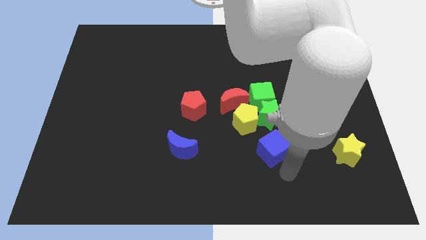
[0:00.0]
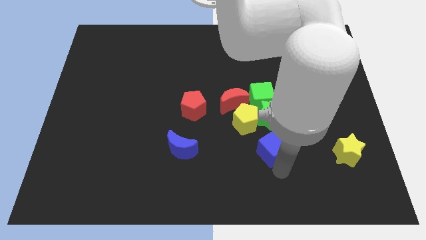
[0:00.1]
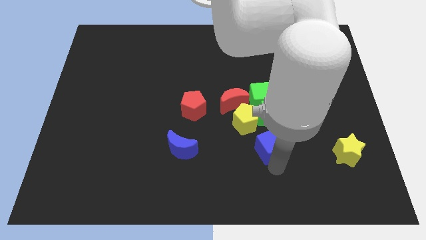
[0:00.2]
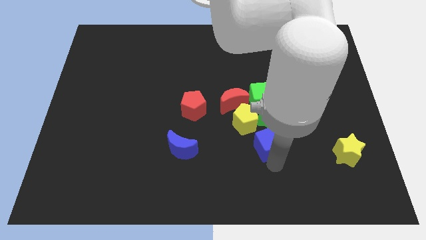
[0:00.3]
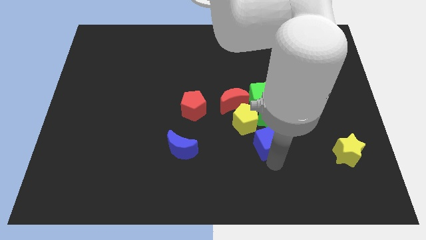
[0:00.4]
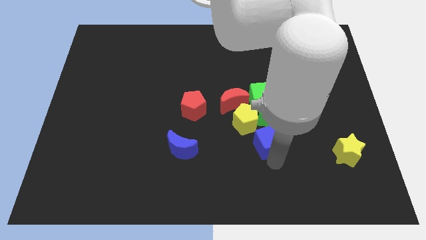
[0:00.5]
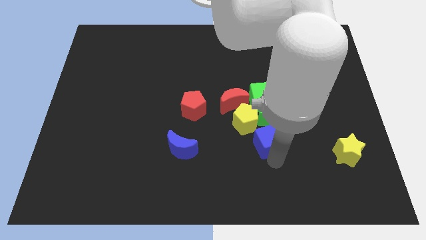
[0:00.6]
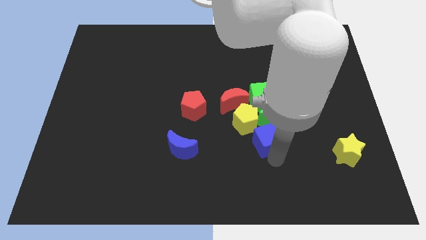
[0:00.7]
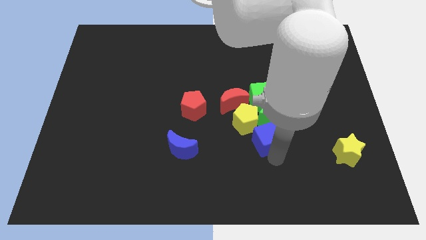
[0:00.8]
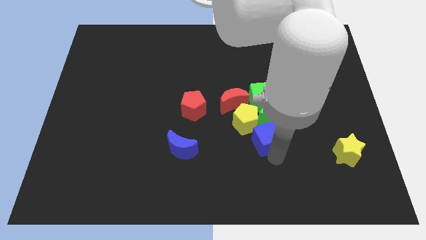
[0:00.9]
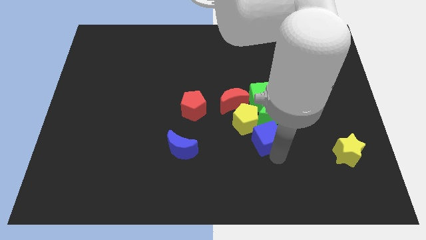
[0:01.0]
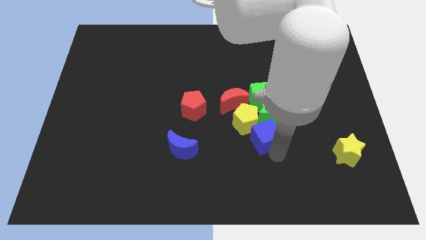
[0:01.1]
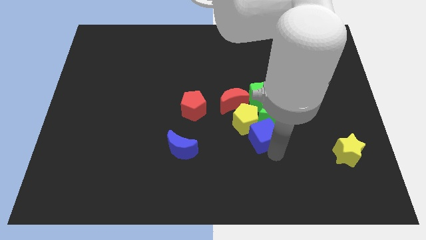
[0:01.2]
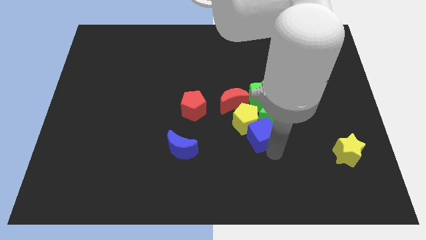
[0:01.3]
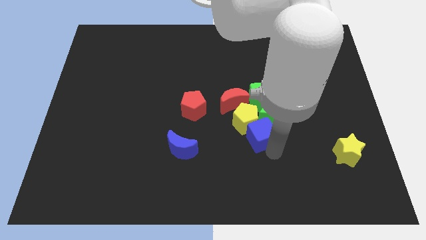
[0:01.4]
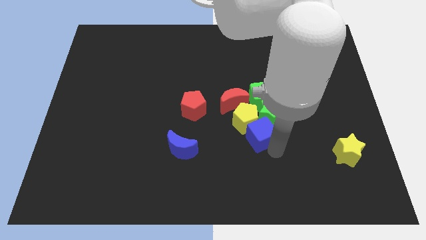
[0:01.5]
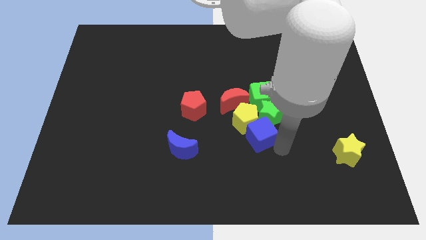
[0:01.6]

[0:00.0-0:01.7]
place blue cube below yellow pentagon

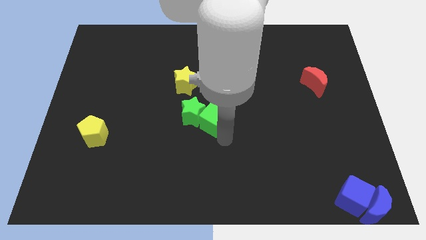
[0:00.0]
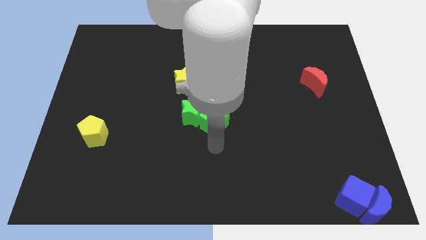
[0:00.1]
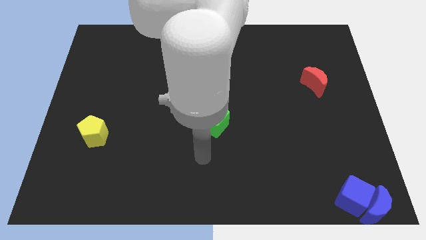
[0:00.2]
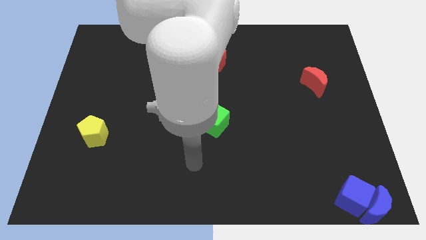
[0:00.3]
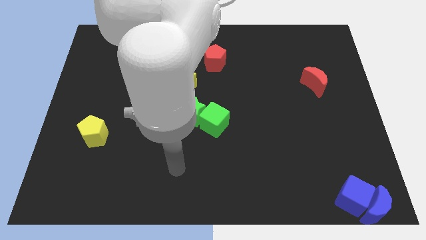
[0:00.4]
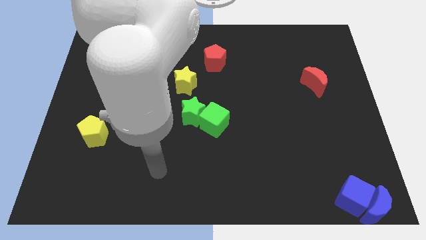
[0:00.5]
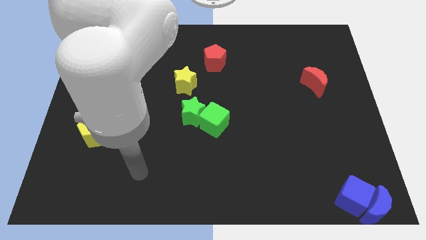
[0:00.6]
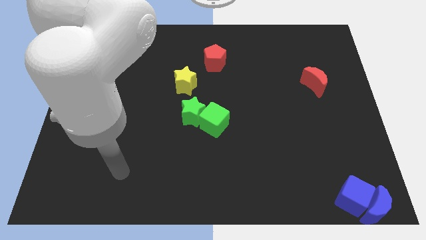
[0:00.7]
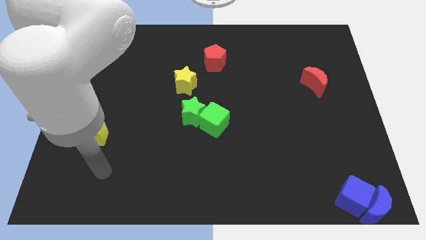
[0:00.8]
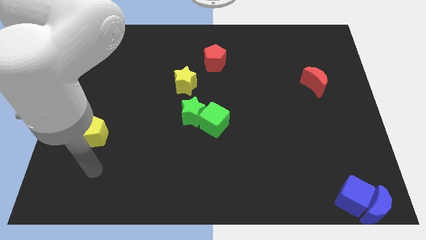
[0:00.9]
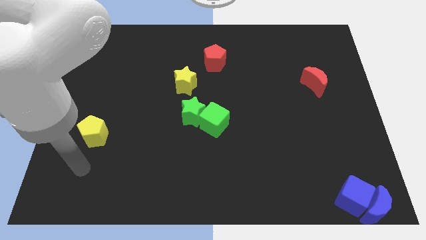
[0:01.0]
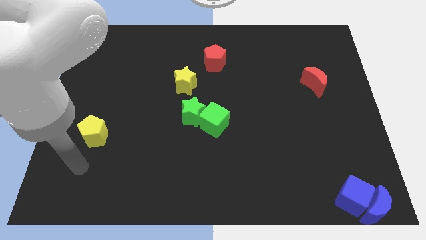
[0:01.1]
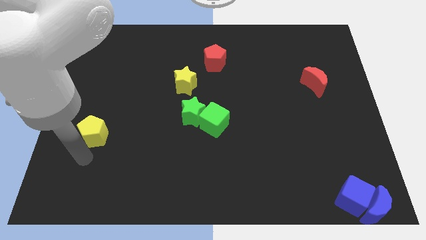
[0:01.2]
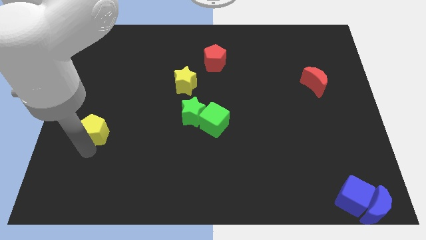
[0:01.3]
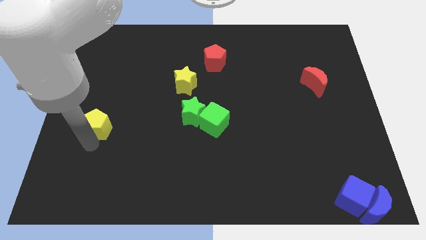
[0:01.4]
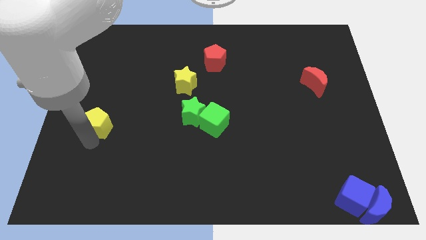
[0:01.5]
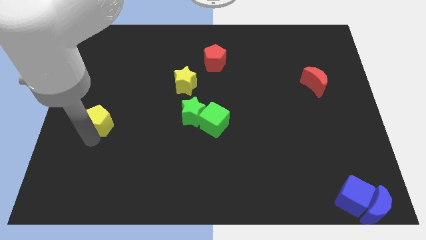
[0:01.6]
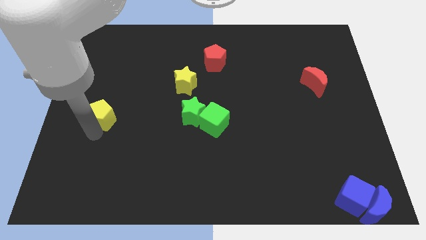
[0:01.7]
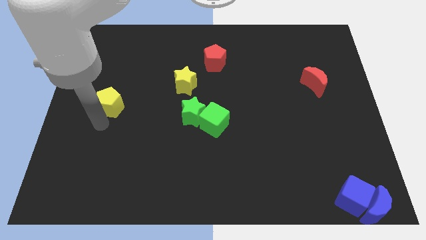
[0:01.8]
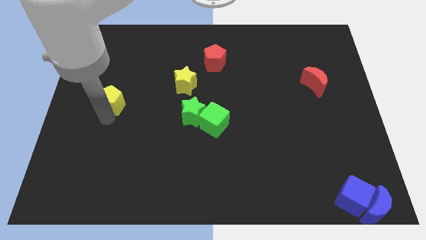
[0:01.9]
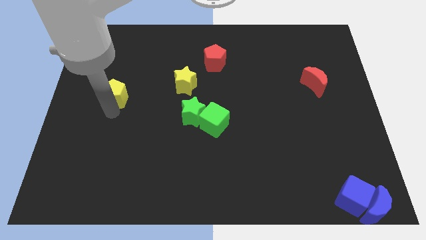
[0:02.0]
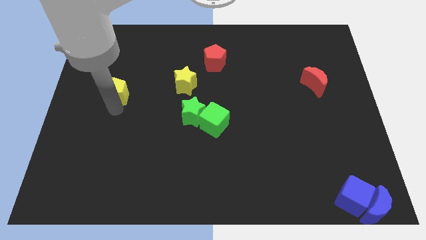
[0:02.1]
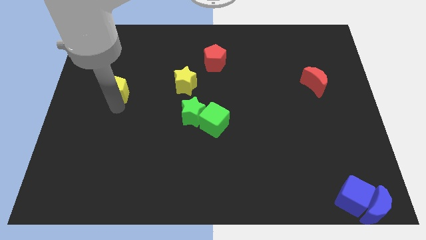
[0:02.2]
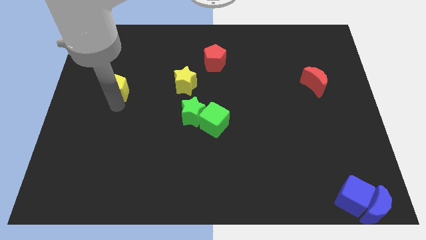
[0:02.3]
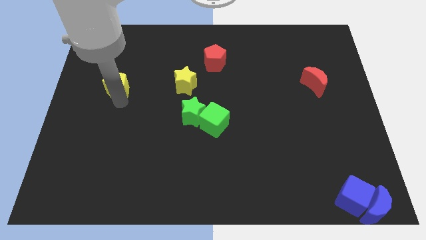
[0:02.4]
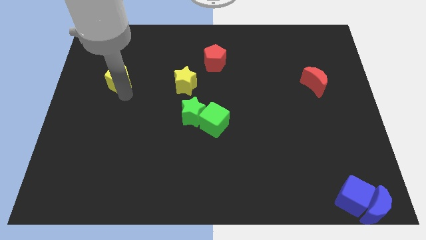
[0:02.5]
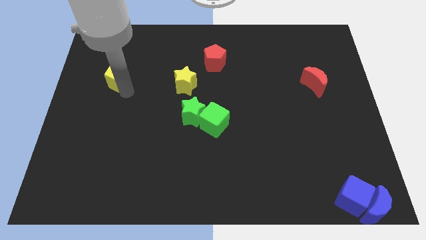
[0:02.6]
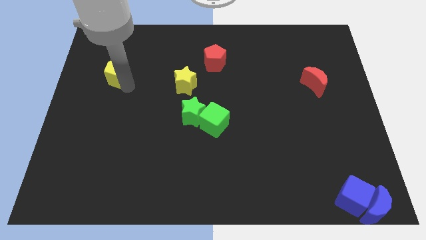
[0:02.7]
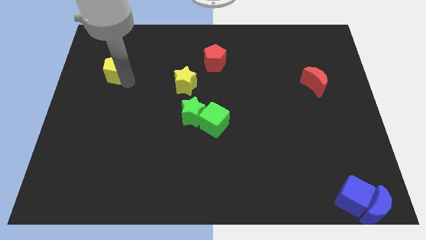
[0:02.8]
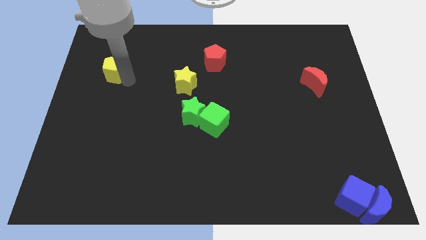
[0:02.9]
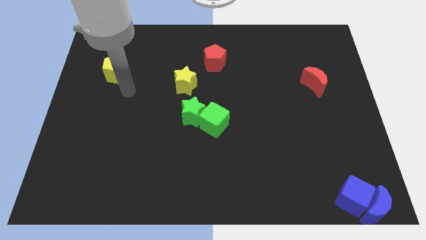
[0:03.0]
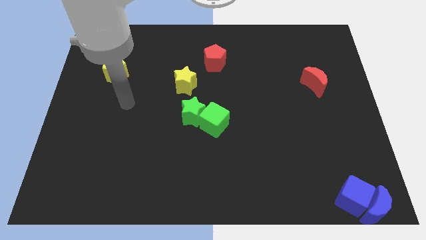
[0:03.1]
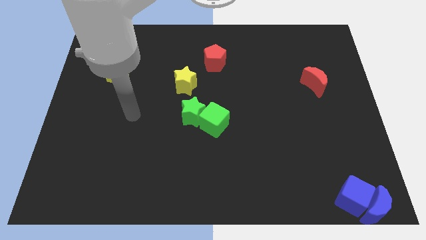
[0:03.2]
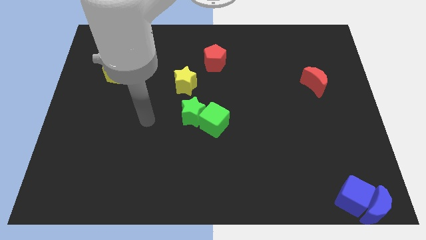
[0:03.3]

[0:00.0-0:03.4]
move the yellow pentagon to the left side of the yellow star

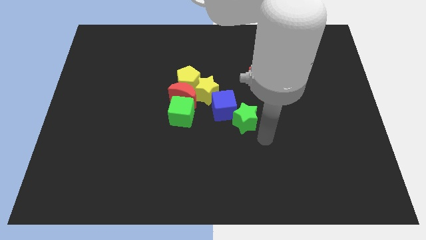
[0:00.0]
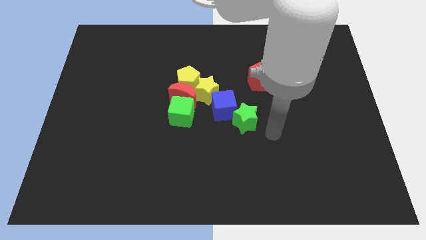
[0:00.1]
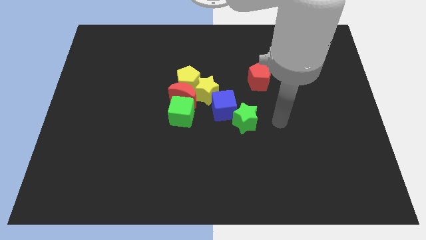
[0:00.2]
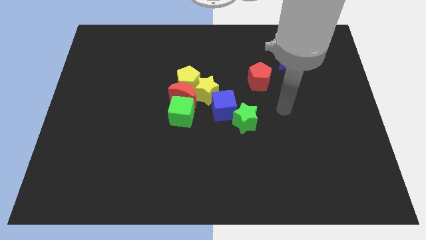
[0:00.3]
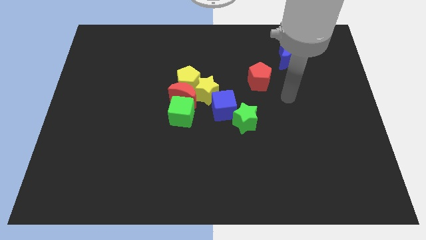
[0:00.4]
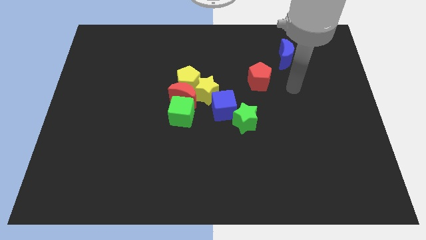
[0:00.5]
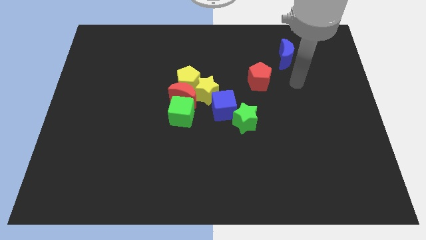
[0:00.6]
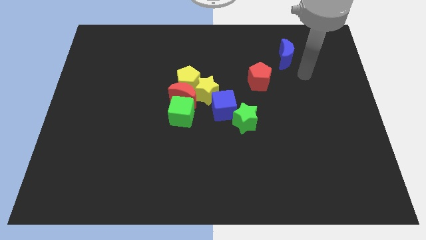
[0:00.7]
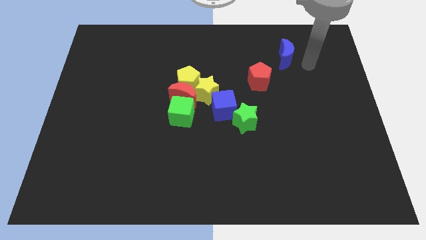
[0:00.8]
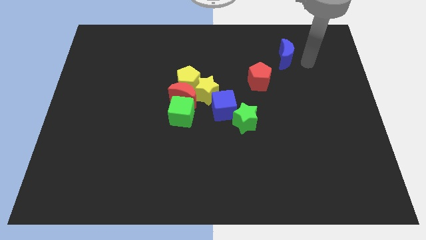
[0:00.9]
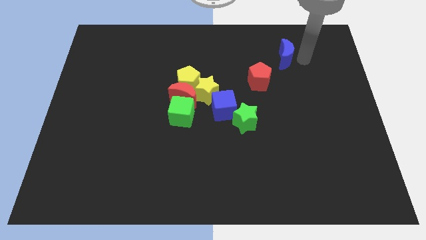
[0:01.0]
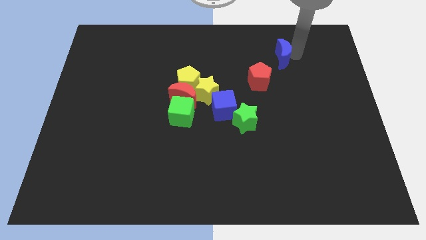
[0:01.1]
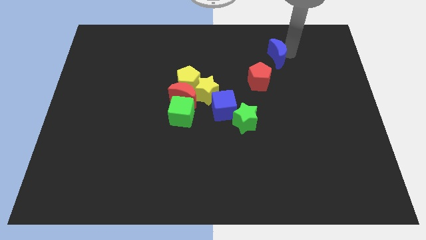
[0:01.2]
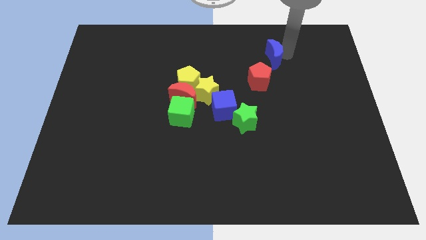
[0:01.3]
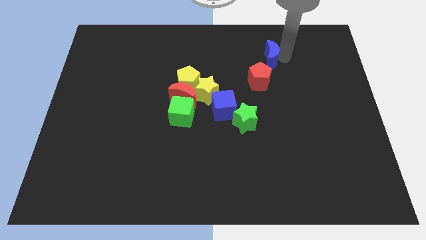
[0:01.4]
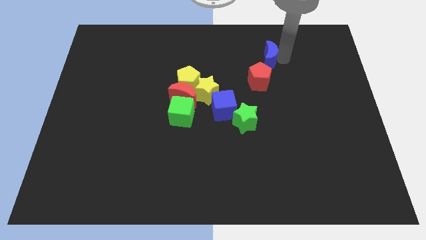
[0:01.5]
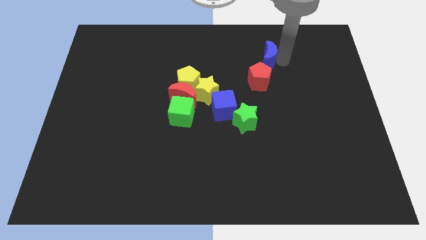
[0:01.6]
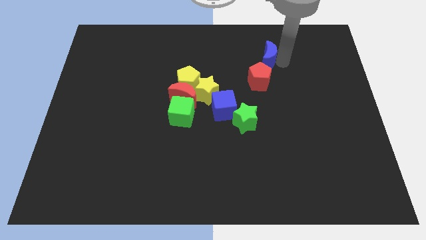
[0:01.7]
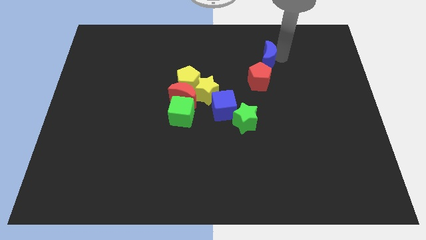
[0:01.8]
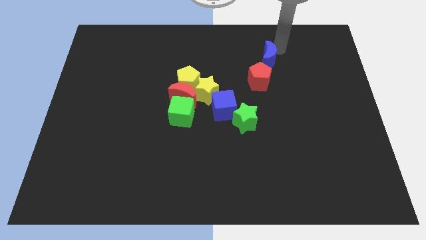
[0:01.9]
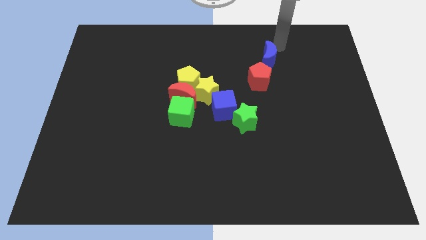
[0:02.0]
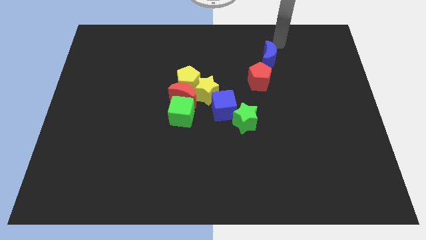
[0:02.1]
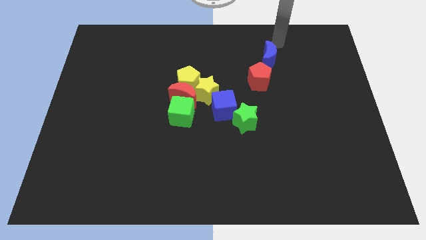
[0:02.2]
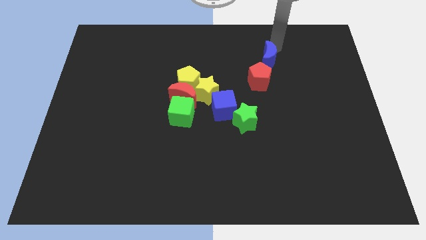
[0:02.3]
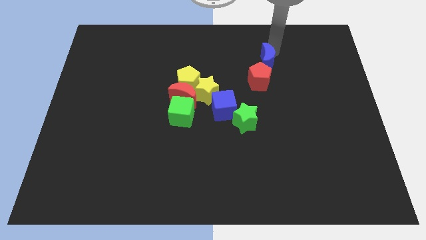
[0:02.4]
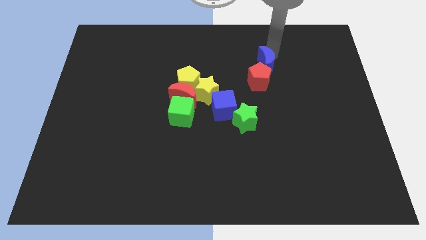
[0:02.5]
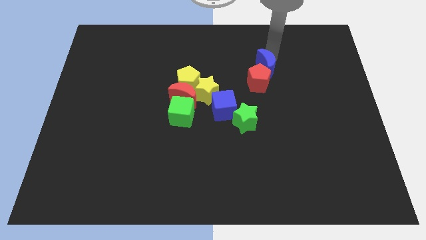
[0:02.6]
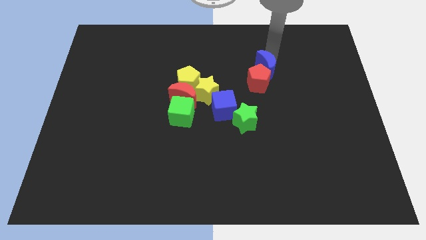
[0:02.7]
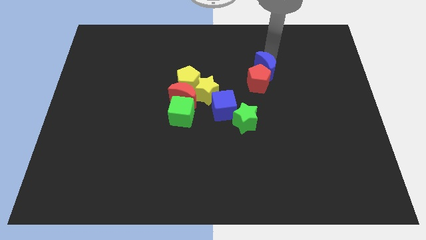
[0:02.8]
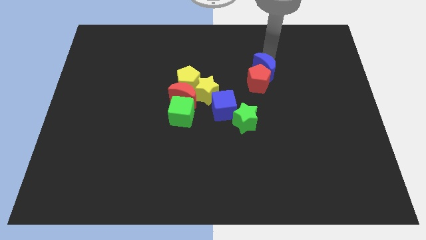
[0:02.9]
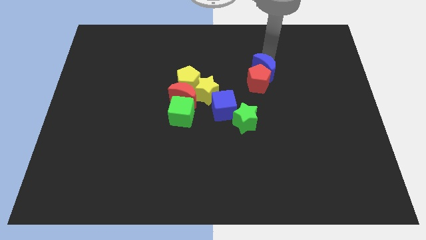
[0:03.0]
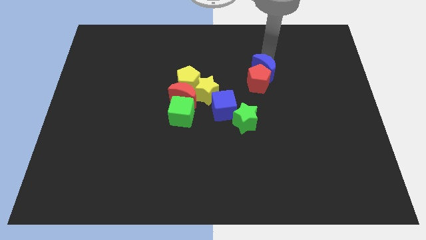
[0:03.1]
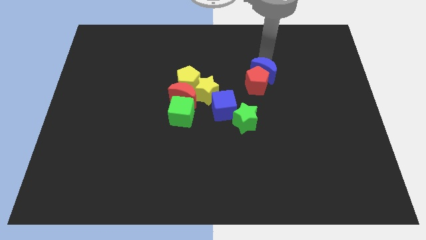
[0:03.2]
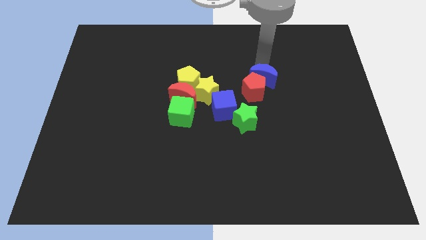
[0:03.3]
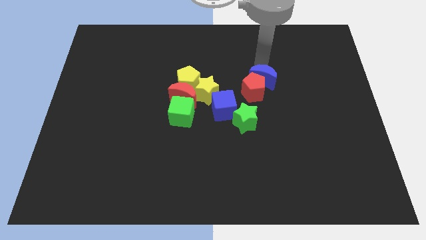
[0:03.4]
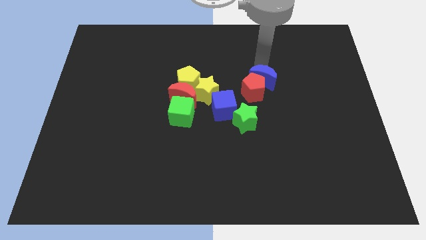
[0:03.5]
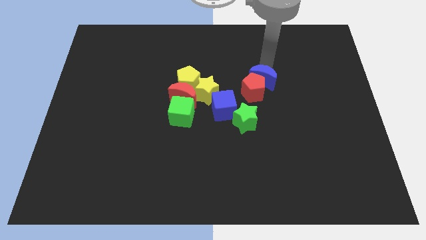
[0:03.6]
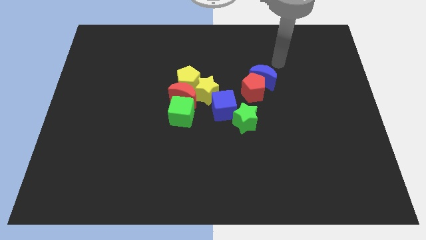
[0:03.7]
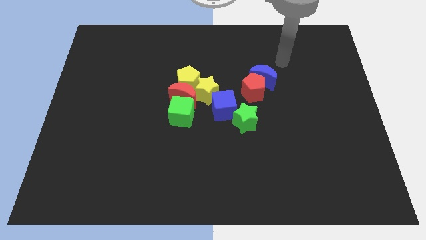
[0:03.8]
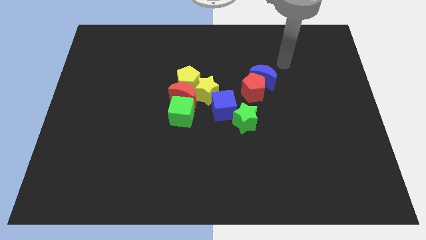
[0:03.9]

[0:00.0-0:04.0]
push the blue crescent above the red pentagon
